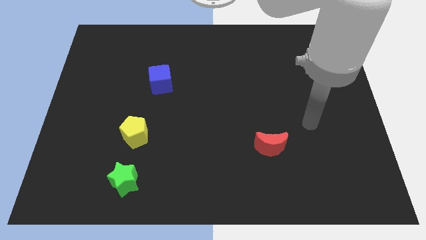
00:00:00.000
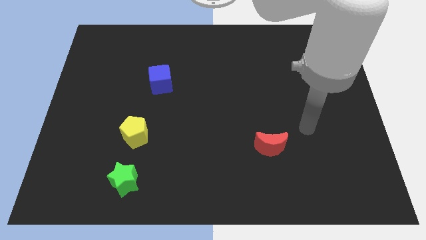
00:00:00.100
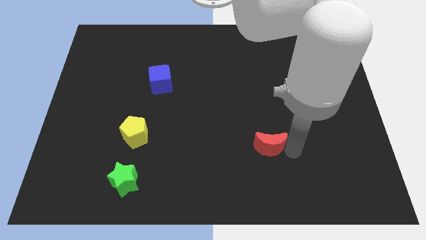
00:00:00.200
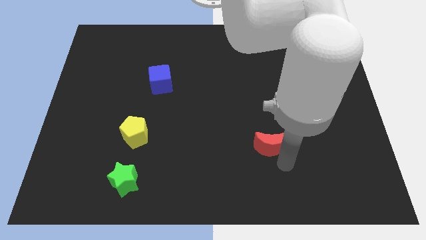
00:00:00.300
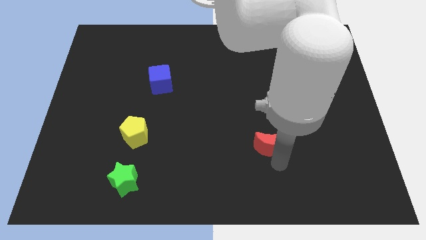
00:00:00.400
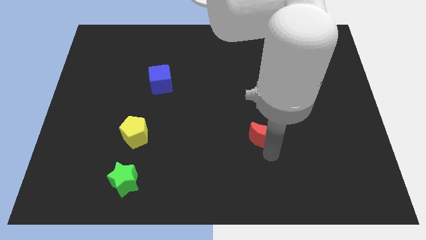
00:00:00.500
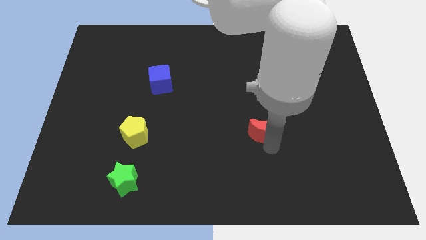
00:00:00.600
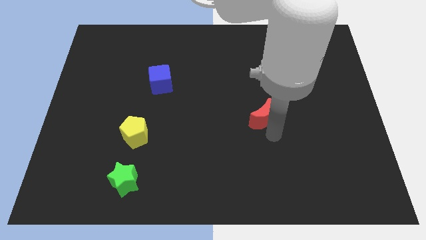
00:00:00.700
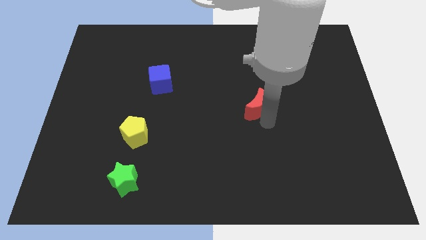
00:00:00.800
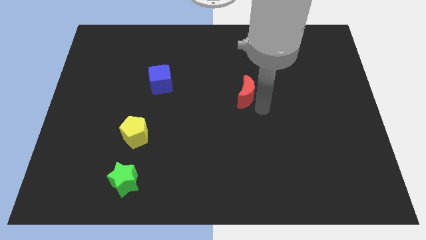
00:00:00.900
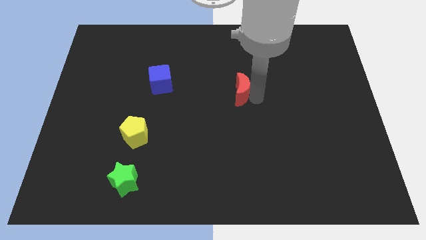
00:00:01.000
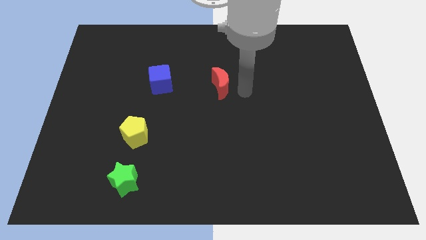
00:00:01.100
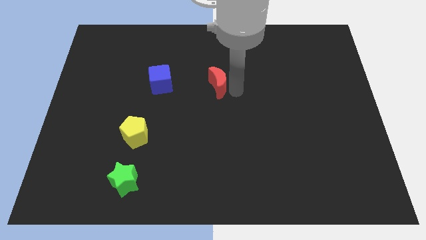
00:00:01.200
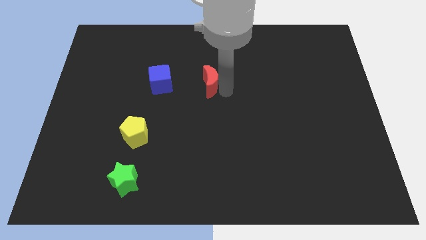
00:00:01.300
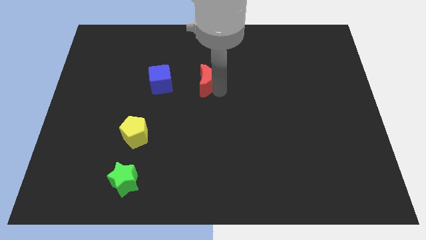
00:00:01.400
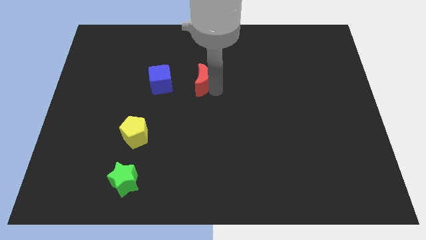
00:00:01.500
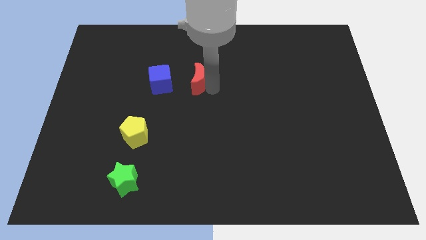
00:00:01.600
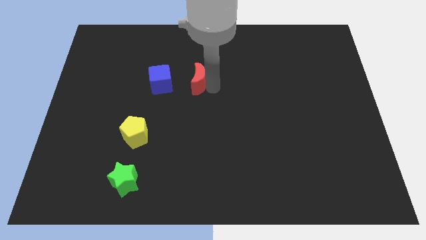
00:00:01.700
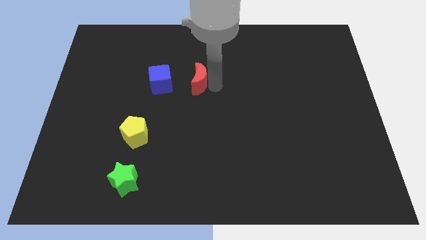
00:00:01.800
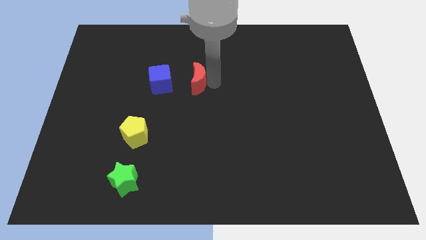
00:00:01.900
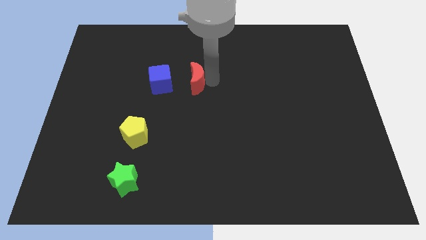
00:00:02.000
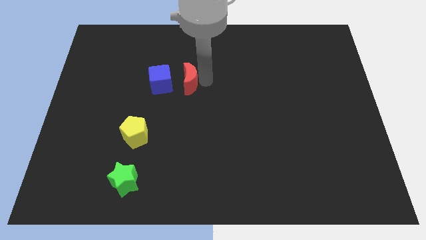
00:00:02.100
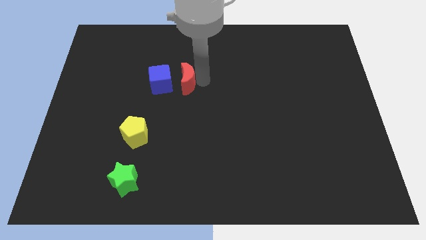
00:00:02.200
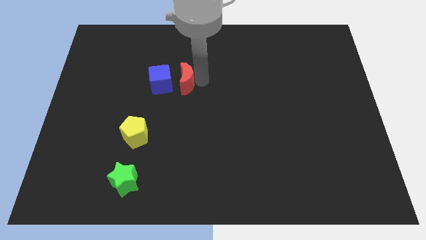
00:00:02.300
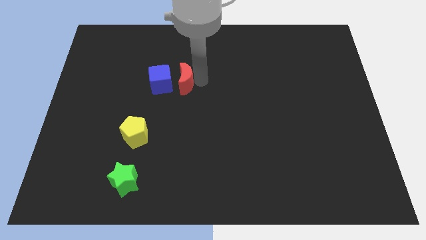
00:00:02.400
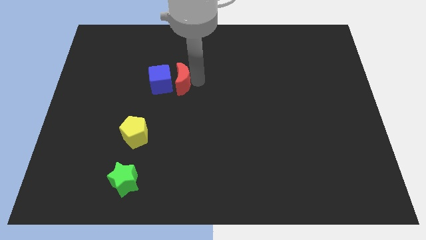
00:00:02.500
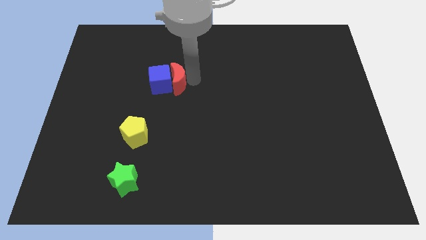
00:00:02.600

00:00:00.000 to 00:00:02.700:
put the moon towards the blue block

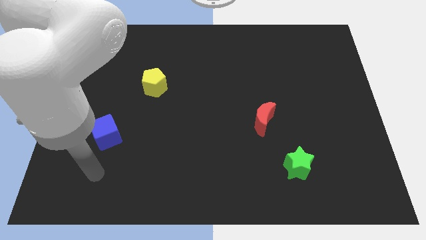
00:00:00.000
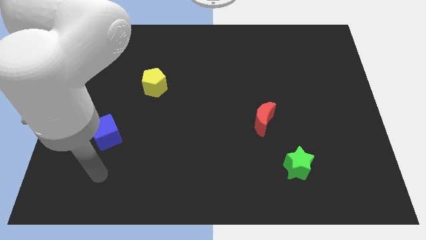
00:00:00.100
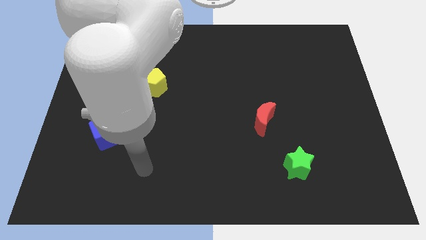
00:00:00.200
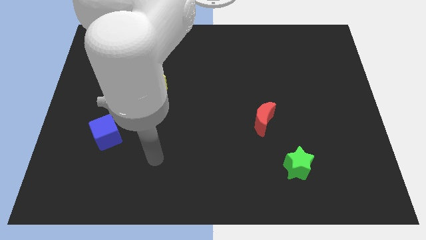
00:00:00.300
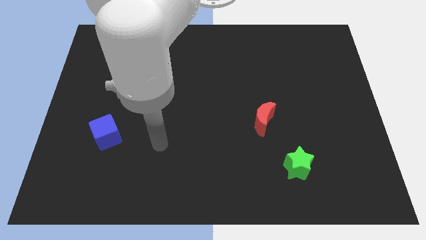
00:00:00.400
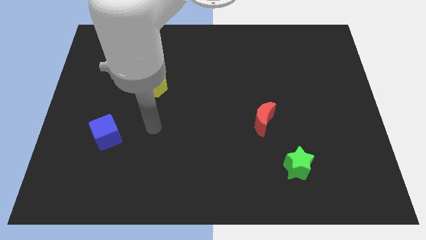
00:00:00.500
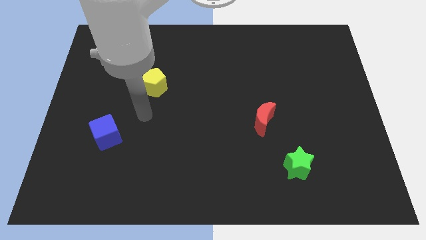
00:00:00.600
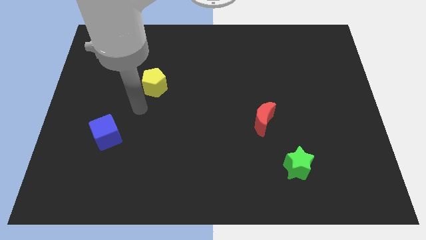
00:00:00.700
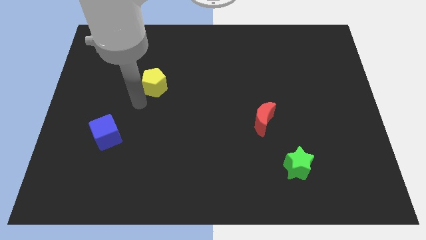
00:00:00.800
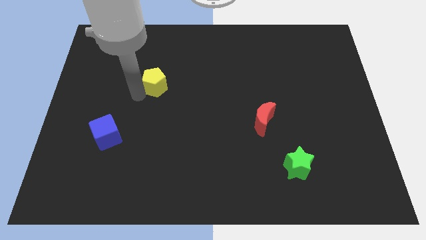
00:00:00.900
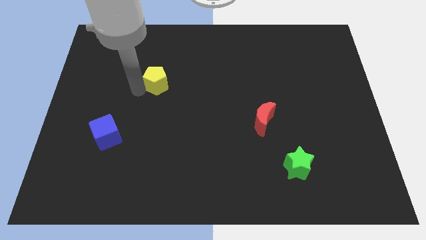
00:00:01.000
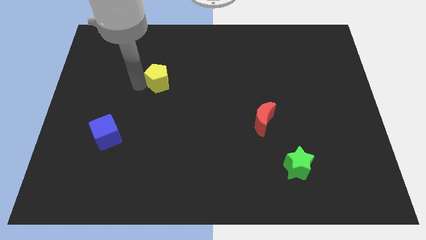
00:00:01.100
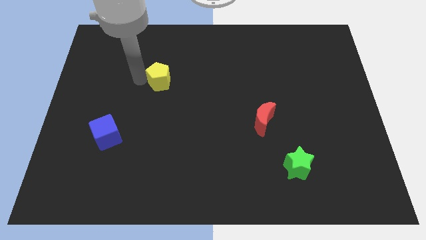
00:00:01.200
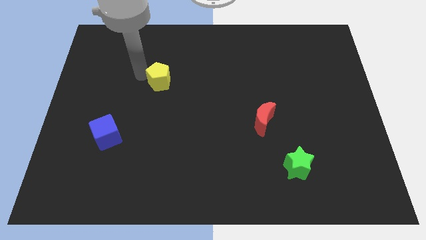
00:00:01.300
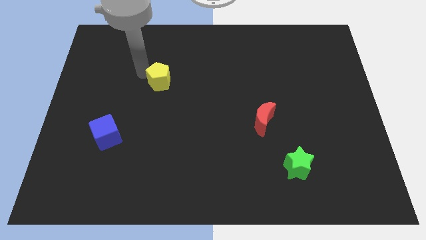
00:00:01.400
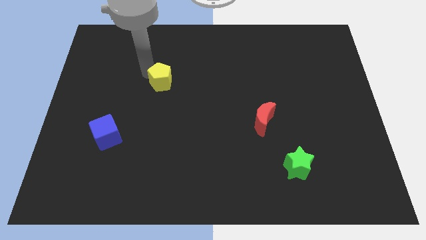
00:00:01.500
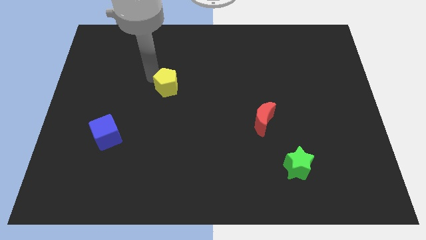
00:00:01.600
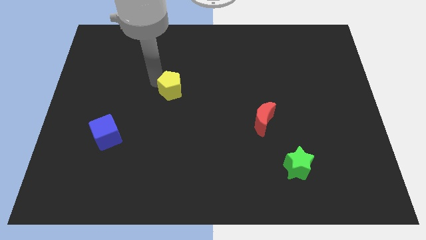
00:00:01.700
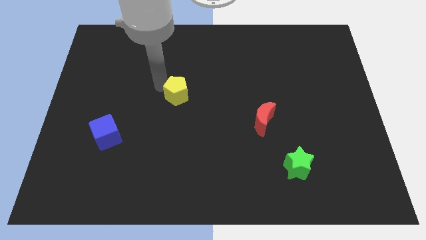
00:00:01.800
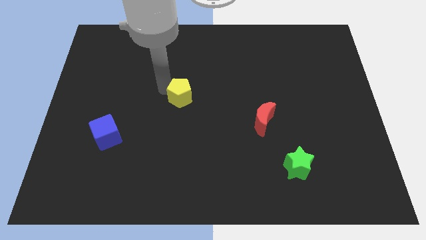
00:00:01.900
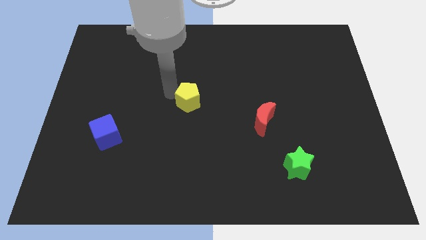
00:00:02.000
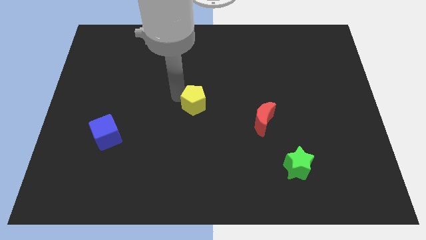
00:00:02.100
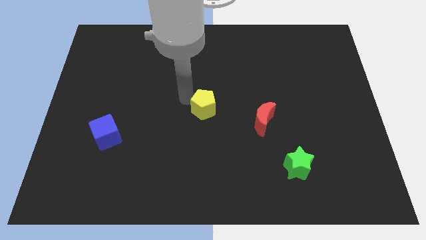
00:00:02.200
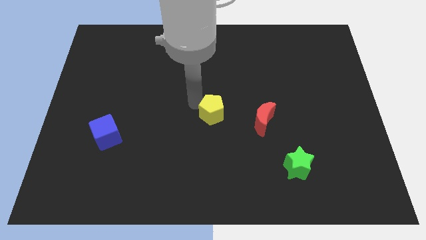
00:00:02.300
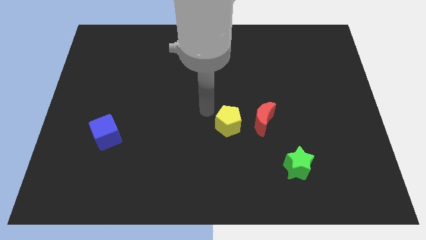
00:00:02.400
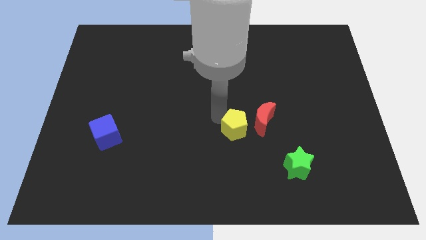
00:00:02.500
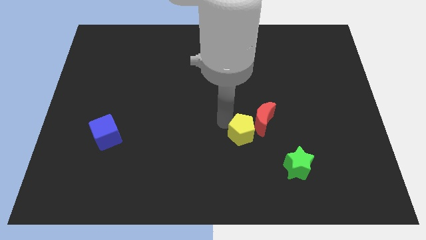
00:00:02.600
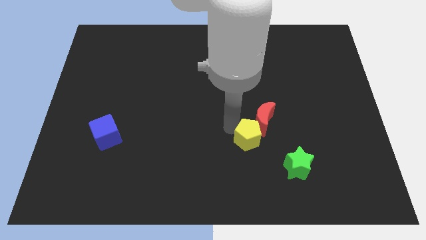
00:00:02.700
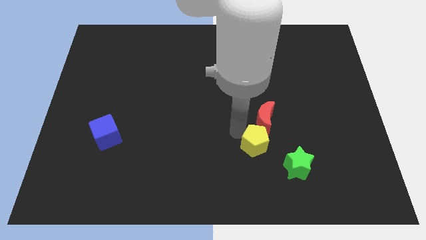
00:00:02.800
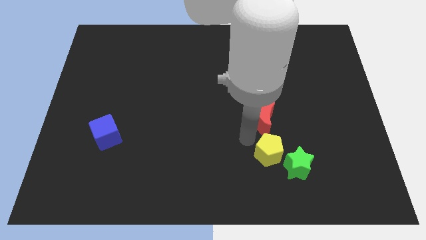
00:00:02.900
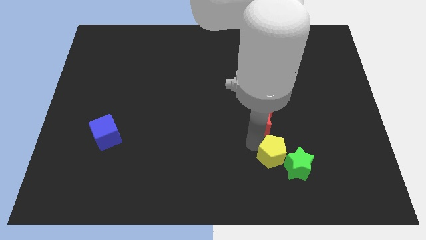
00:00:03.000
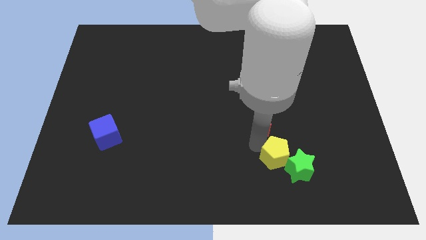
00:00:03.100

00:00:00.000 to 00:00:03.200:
move the yellow block close to the green block

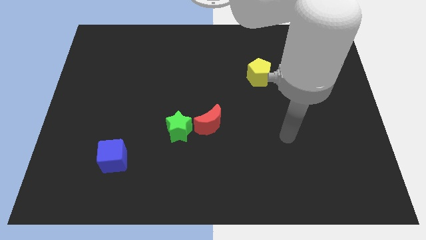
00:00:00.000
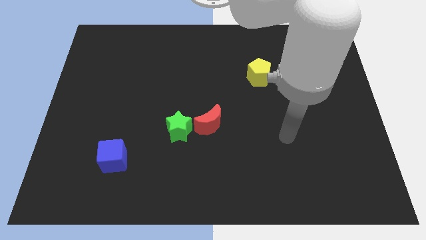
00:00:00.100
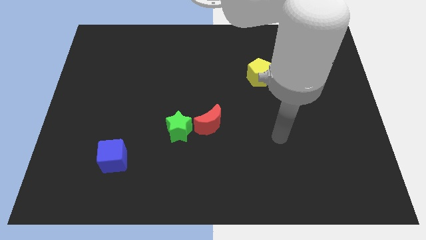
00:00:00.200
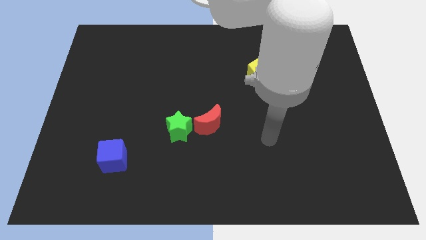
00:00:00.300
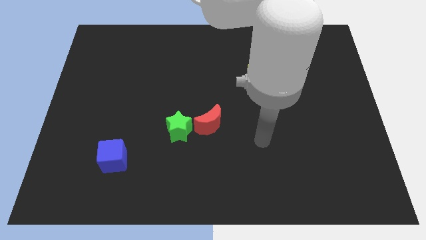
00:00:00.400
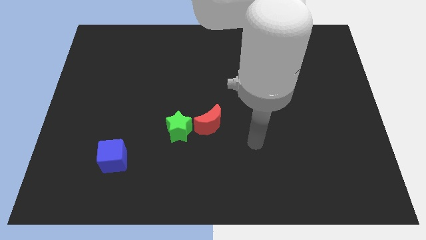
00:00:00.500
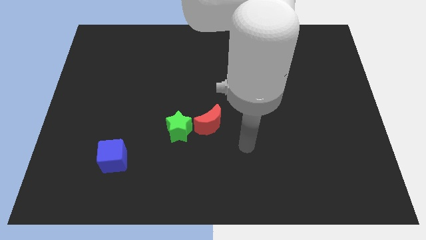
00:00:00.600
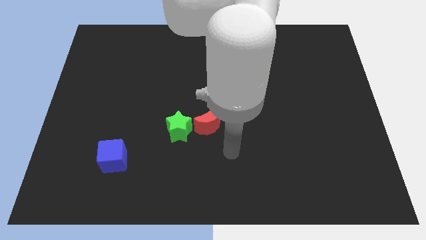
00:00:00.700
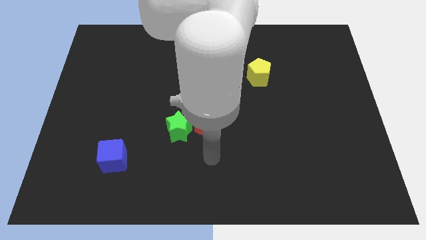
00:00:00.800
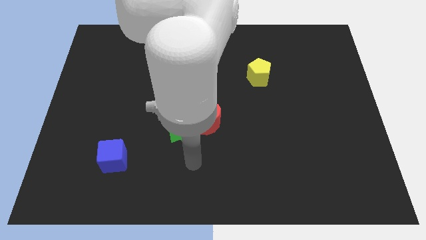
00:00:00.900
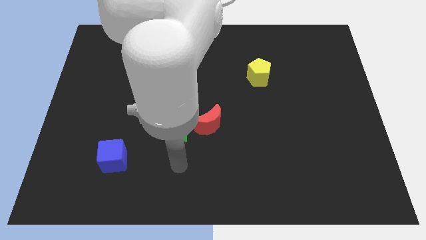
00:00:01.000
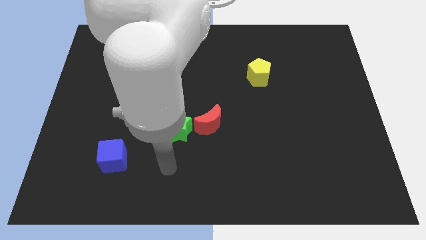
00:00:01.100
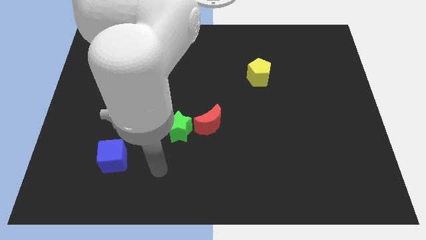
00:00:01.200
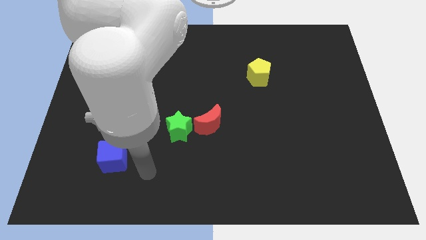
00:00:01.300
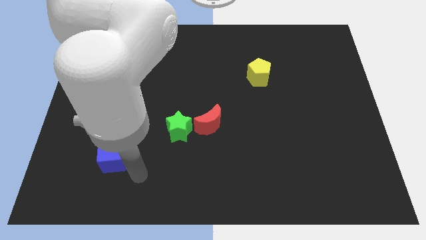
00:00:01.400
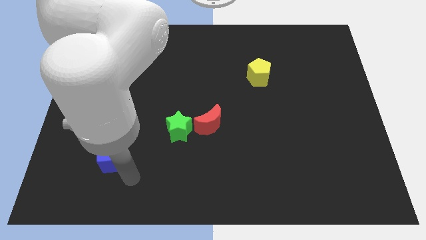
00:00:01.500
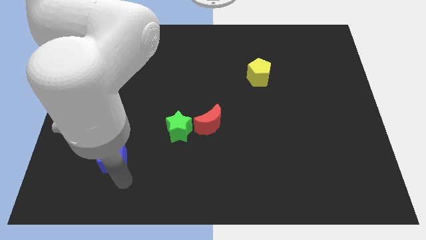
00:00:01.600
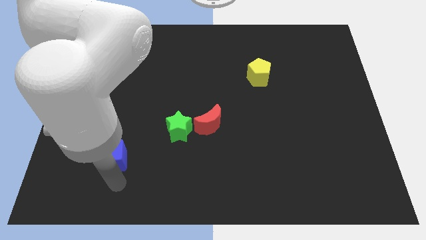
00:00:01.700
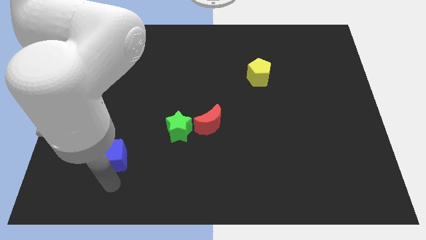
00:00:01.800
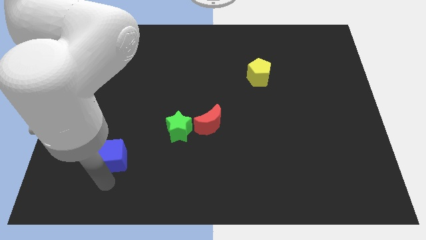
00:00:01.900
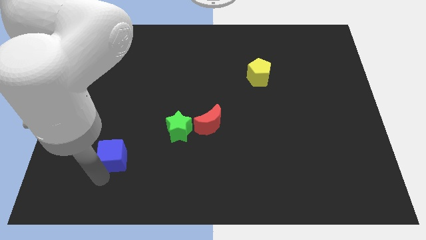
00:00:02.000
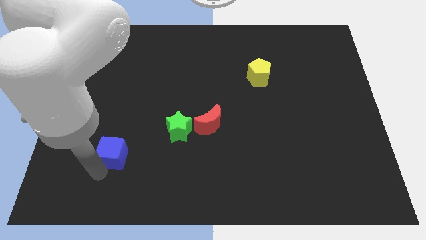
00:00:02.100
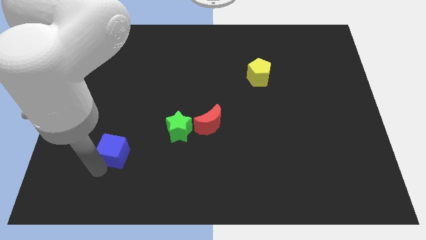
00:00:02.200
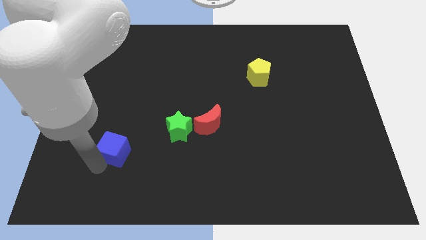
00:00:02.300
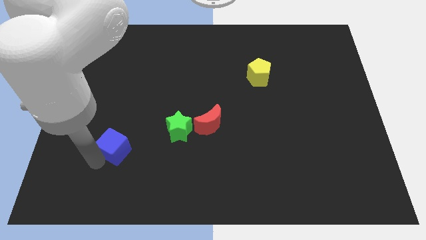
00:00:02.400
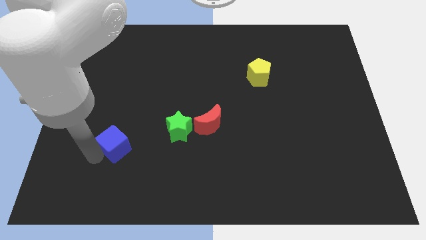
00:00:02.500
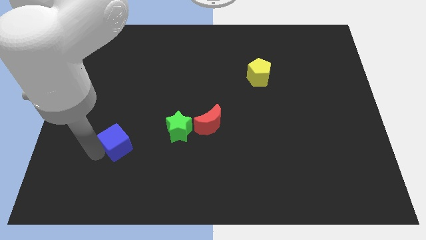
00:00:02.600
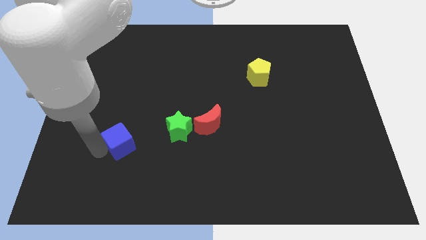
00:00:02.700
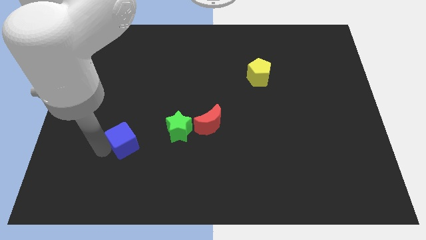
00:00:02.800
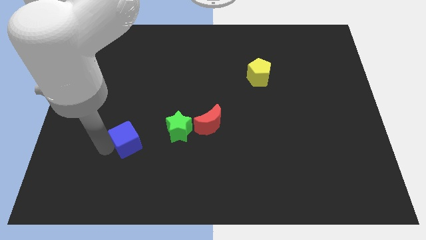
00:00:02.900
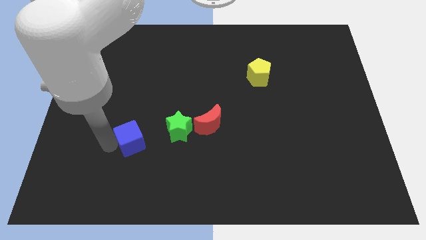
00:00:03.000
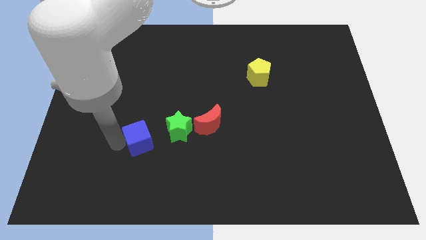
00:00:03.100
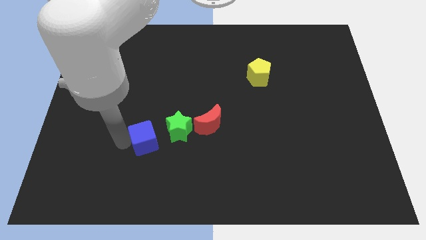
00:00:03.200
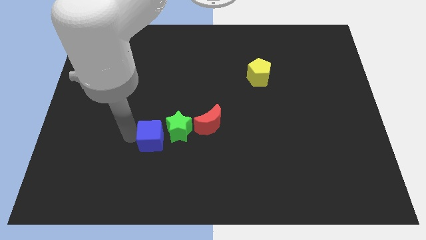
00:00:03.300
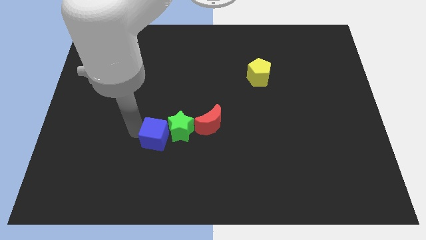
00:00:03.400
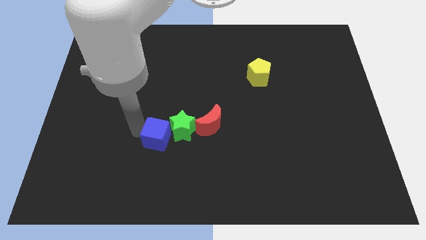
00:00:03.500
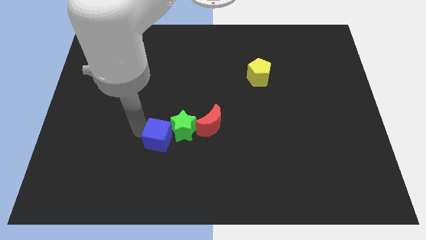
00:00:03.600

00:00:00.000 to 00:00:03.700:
put the blue cube close to the green star
